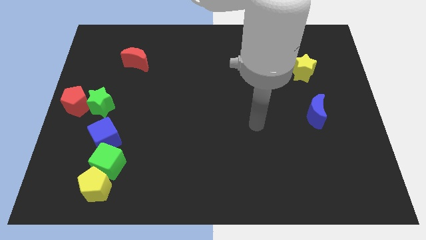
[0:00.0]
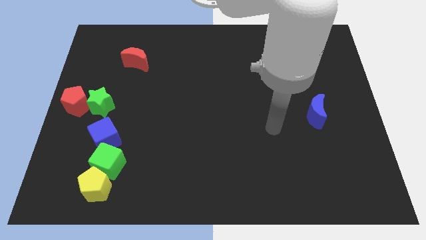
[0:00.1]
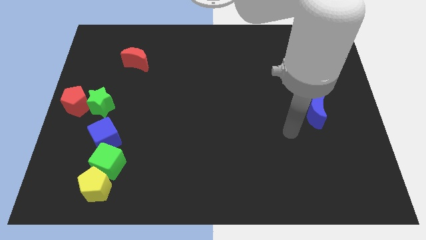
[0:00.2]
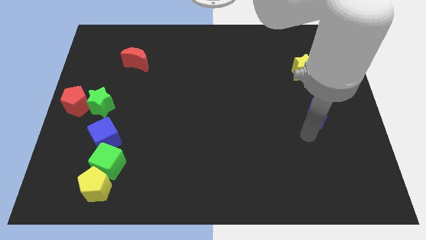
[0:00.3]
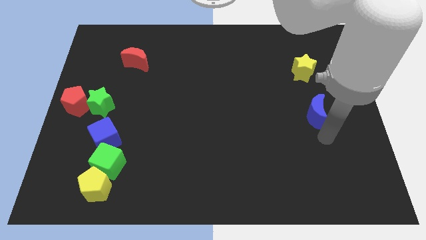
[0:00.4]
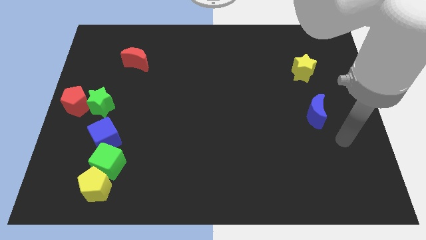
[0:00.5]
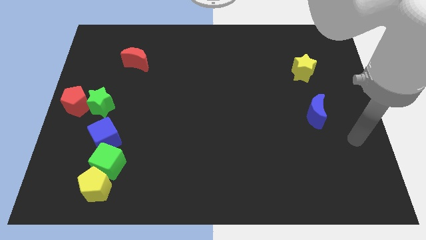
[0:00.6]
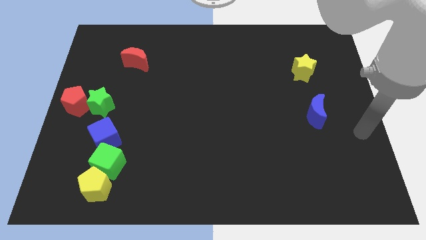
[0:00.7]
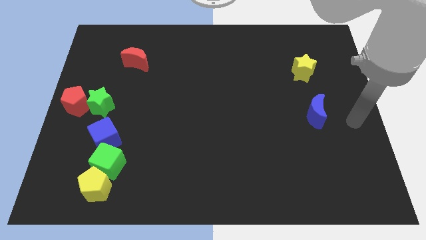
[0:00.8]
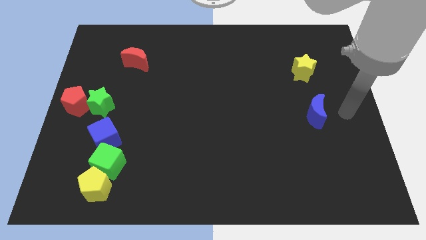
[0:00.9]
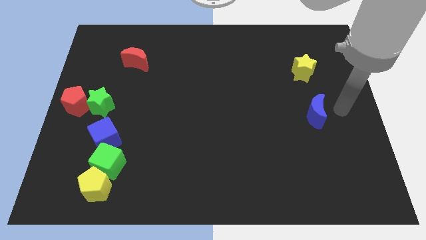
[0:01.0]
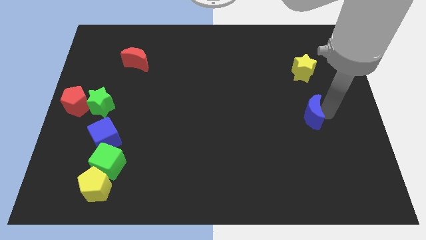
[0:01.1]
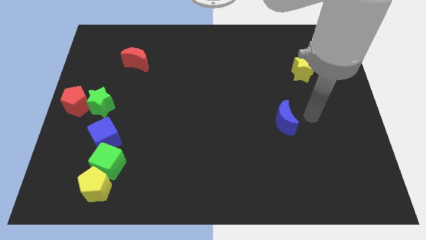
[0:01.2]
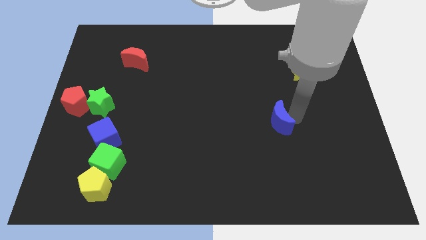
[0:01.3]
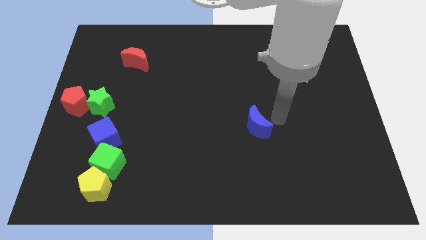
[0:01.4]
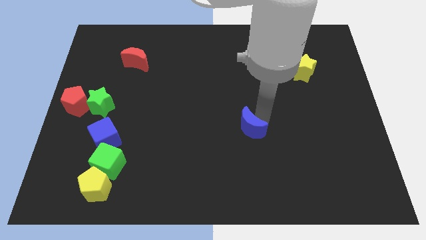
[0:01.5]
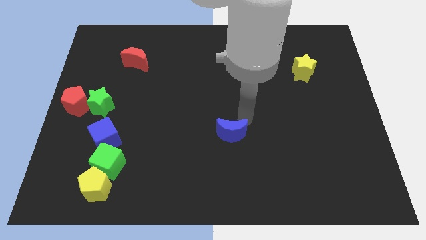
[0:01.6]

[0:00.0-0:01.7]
move the blue crescent horizontally to the right side of the blue cube

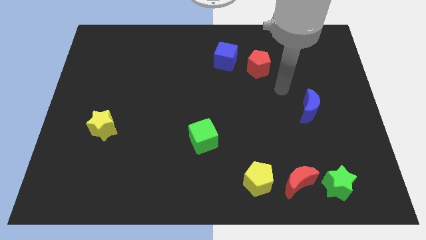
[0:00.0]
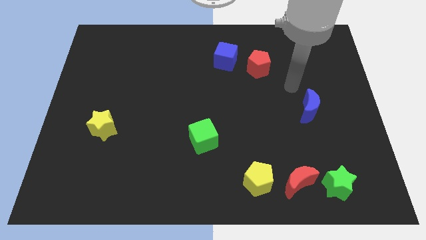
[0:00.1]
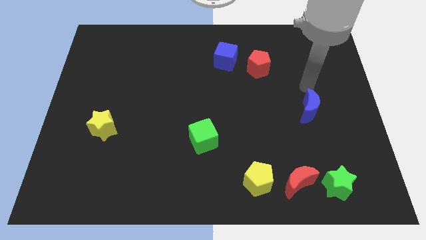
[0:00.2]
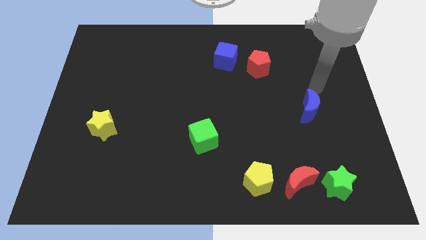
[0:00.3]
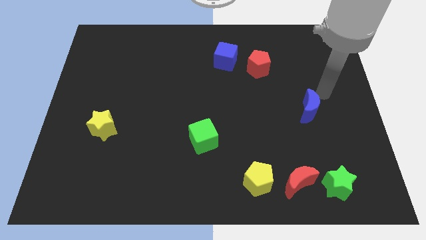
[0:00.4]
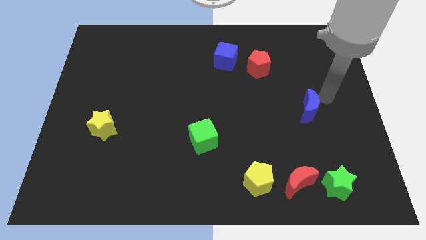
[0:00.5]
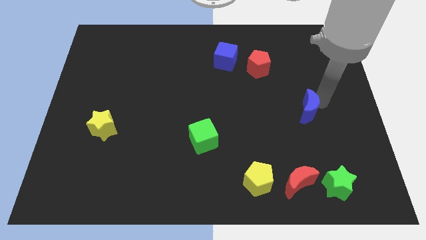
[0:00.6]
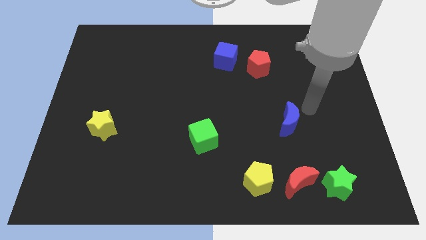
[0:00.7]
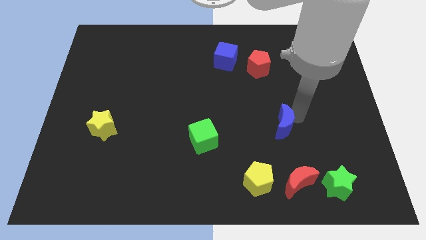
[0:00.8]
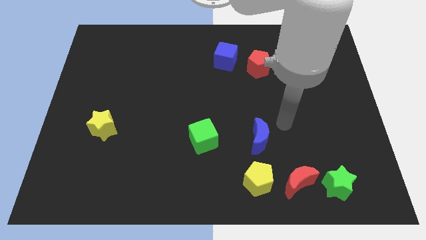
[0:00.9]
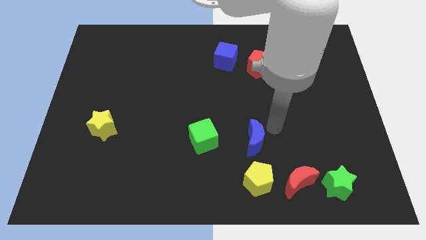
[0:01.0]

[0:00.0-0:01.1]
slide blue moon to the right of green cube

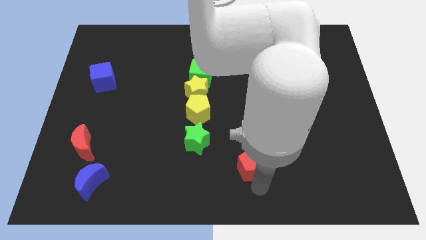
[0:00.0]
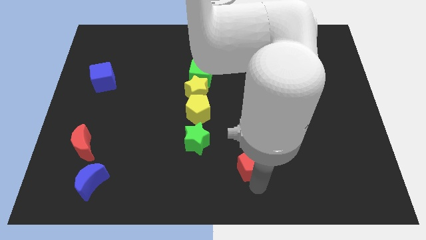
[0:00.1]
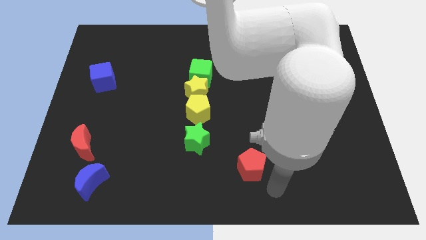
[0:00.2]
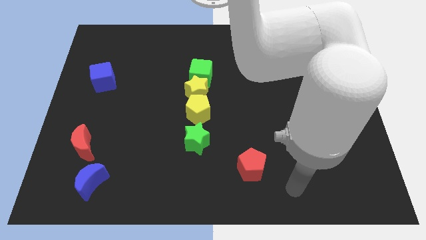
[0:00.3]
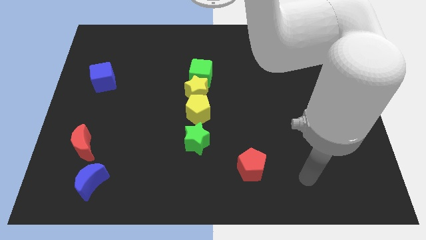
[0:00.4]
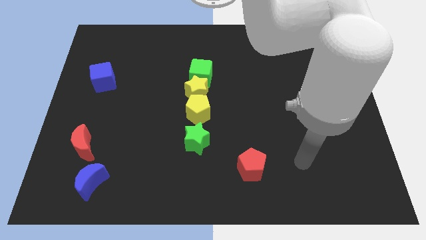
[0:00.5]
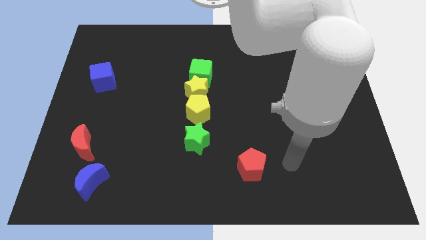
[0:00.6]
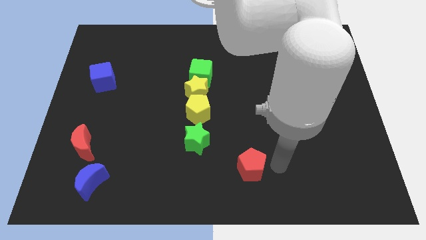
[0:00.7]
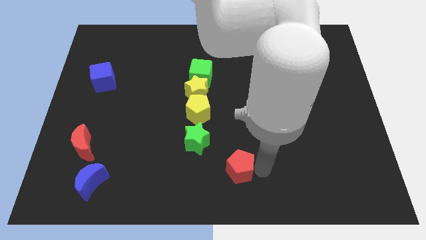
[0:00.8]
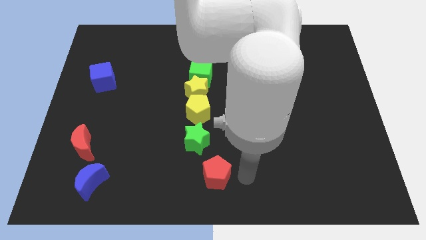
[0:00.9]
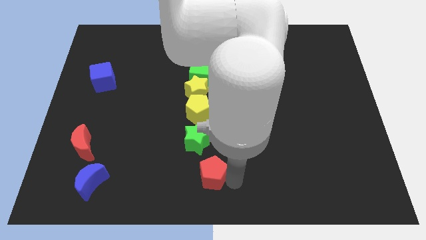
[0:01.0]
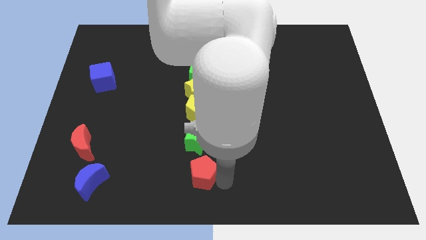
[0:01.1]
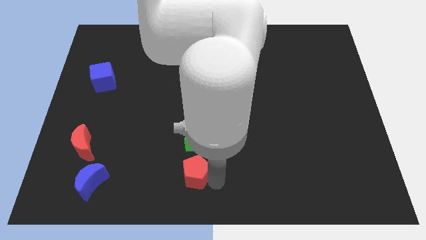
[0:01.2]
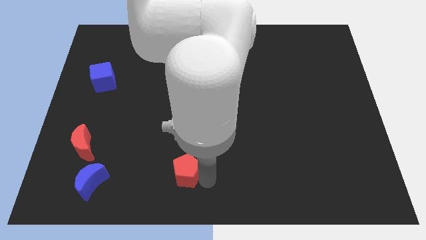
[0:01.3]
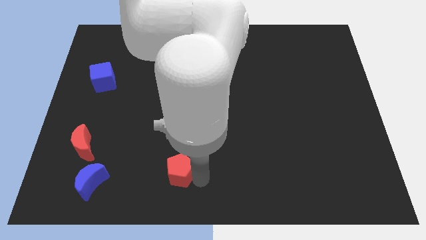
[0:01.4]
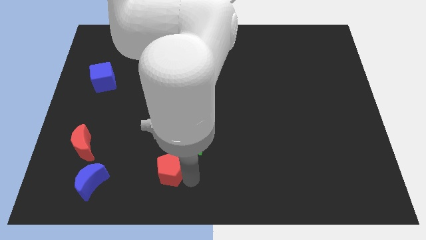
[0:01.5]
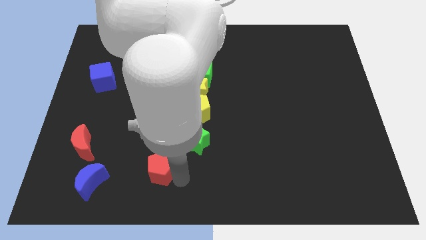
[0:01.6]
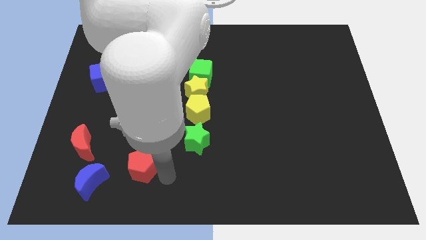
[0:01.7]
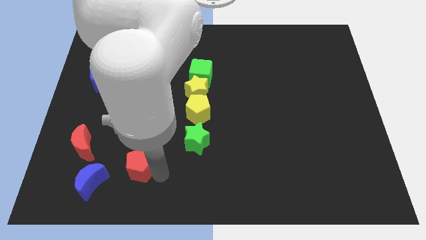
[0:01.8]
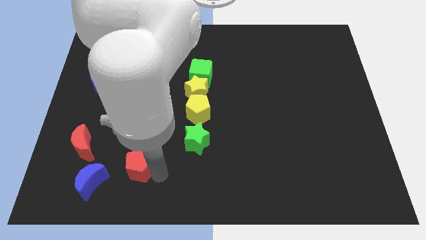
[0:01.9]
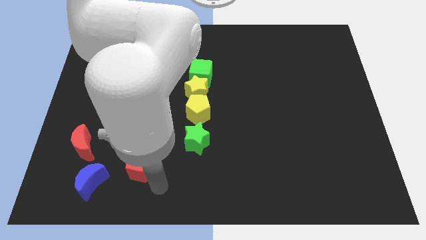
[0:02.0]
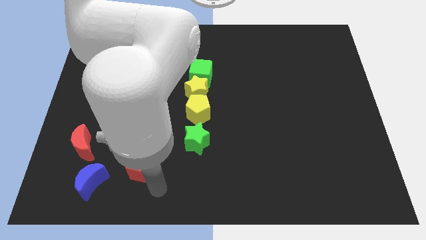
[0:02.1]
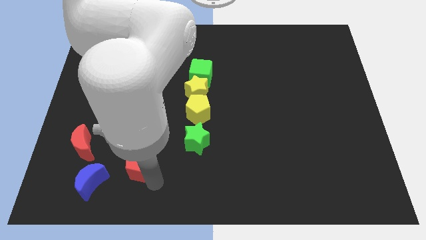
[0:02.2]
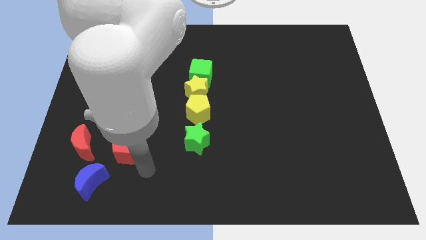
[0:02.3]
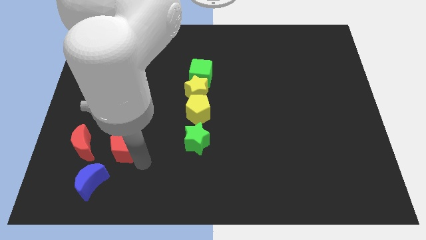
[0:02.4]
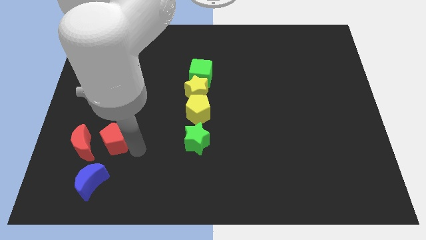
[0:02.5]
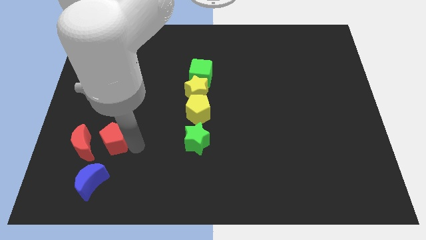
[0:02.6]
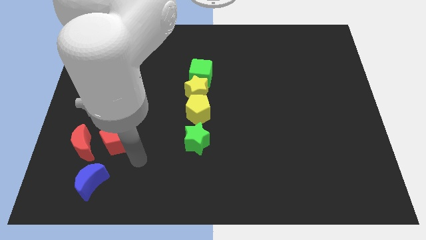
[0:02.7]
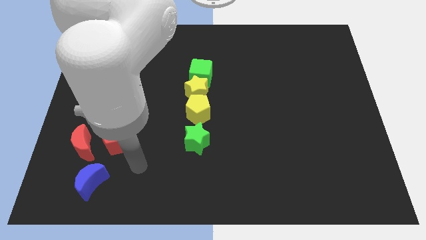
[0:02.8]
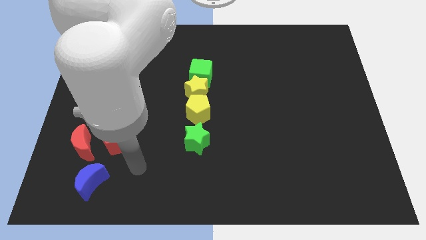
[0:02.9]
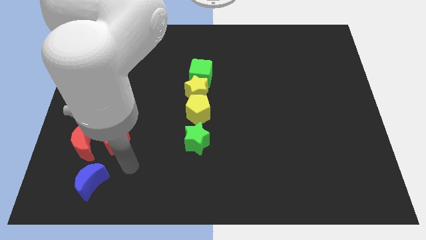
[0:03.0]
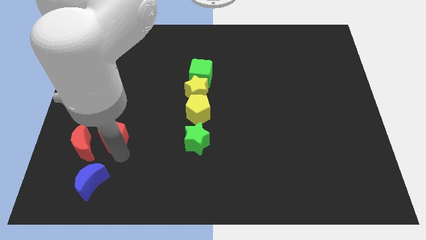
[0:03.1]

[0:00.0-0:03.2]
move the red pentagon diagonal right to the blue moon

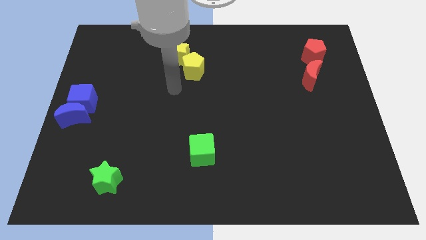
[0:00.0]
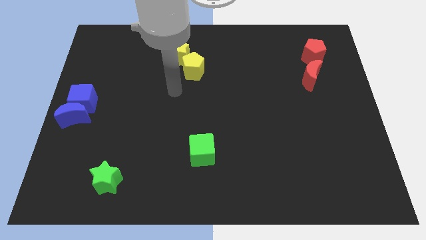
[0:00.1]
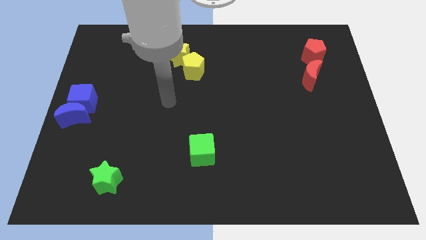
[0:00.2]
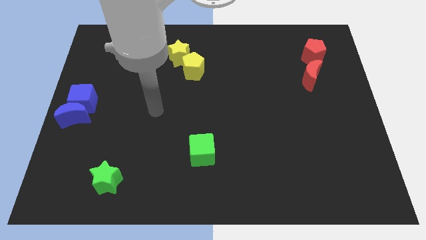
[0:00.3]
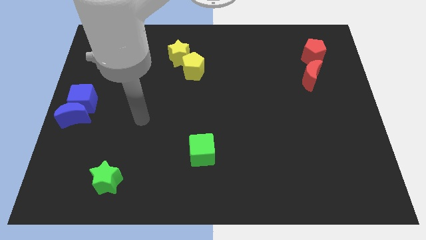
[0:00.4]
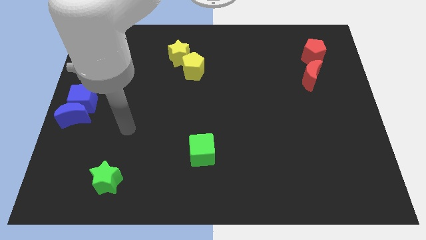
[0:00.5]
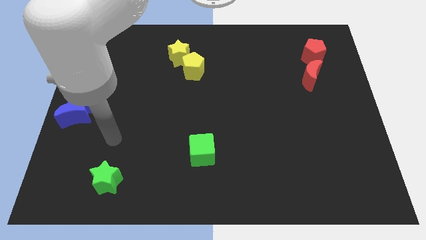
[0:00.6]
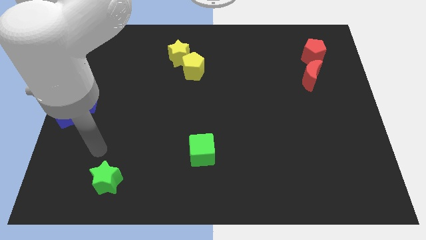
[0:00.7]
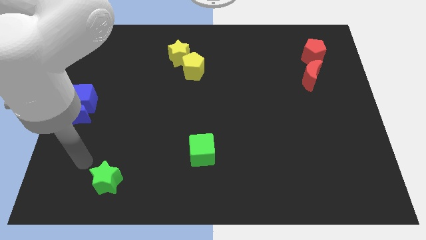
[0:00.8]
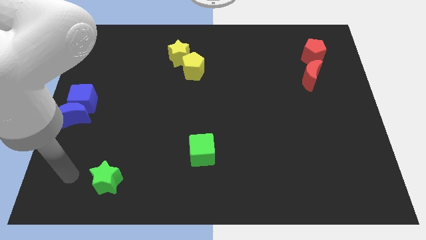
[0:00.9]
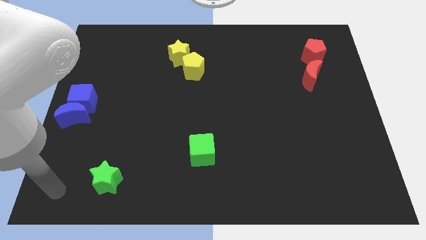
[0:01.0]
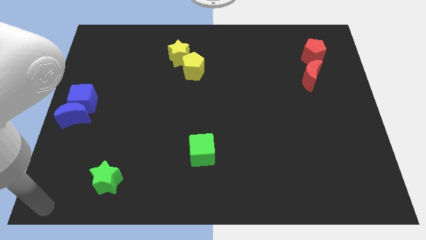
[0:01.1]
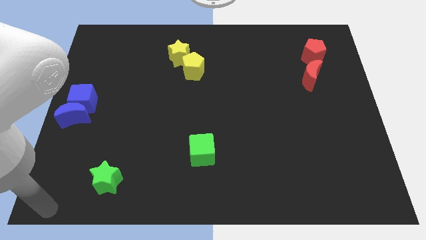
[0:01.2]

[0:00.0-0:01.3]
push arm at bottom left corner

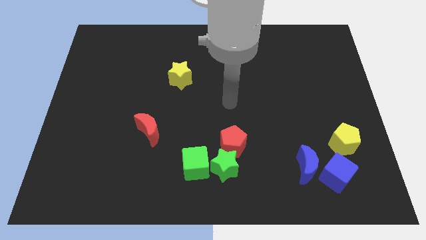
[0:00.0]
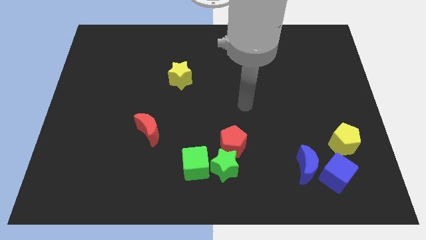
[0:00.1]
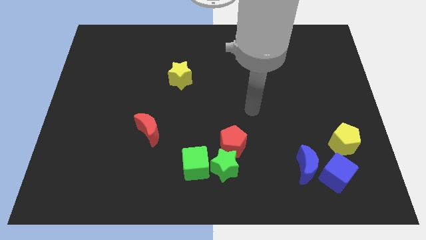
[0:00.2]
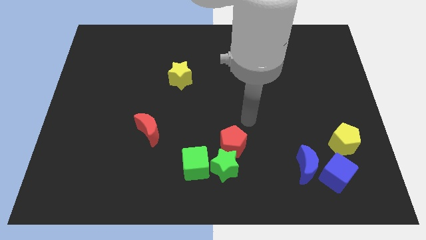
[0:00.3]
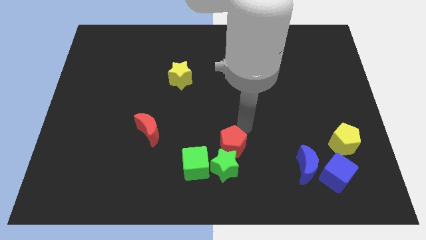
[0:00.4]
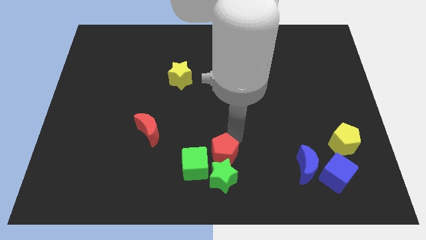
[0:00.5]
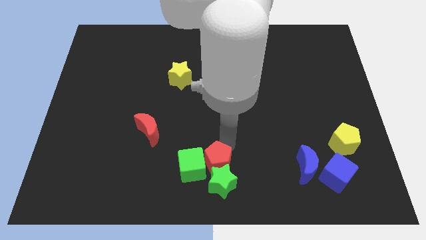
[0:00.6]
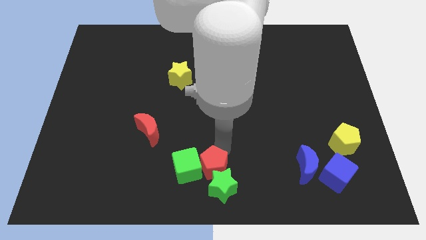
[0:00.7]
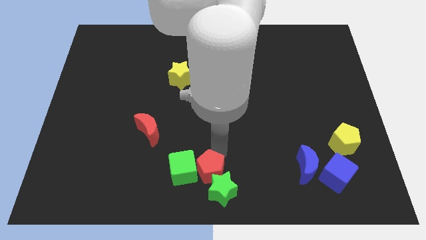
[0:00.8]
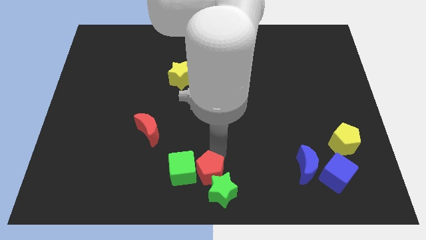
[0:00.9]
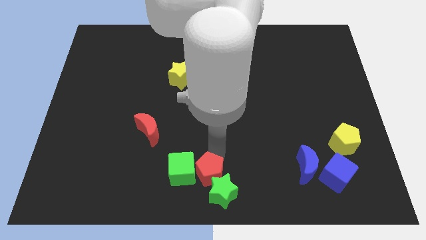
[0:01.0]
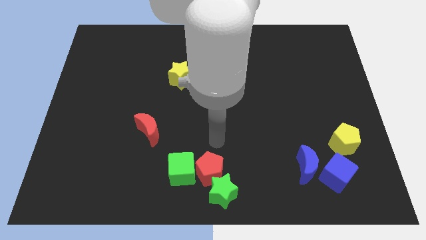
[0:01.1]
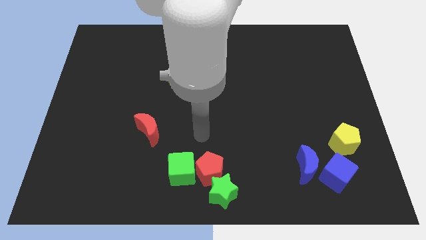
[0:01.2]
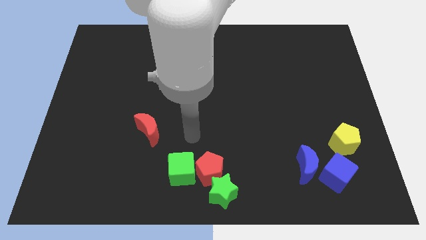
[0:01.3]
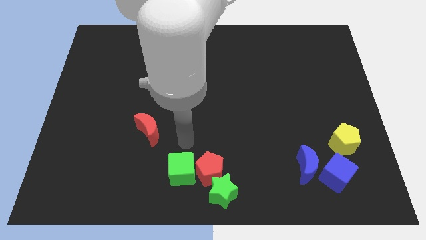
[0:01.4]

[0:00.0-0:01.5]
move the red pentagon to the right of the green cube

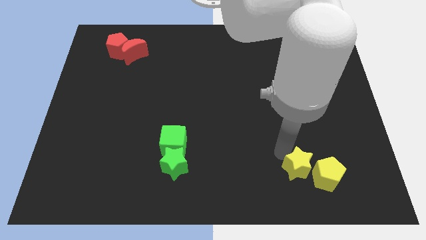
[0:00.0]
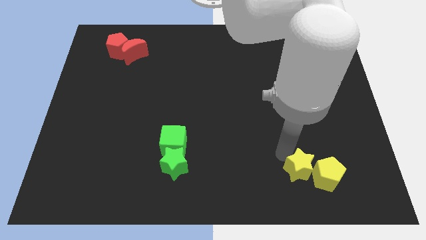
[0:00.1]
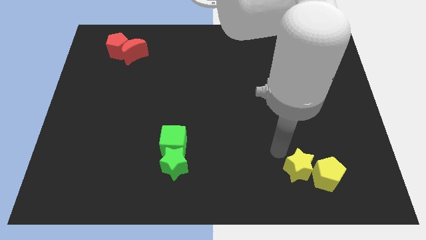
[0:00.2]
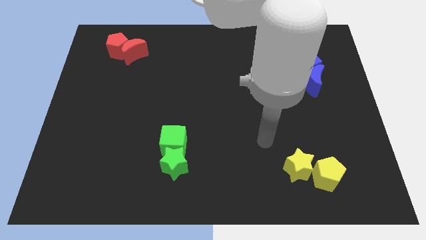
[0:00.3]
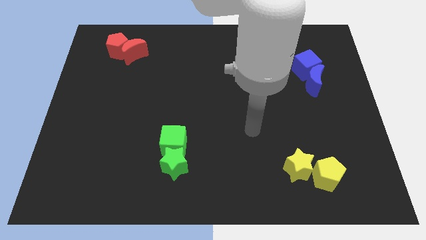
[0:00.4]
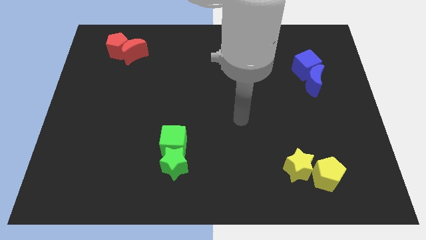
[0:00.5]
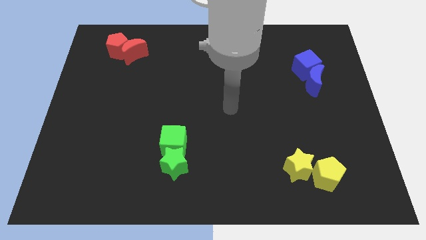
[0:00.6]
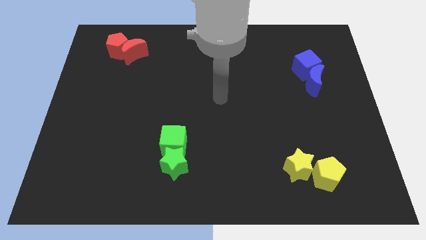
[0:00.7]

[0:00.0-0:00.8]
move your arm towards the centre of the board
